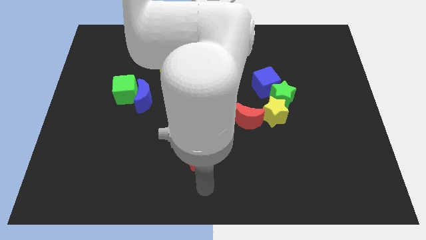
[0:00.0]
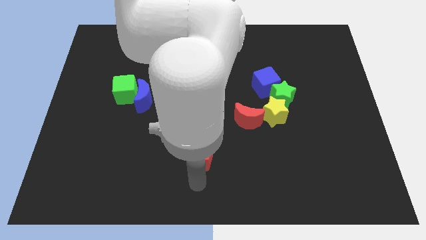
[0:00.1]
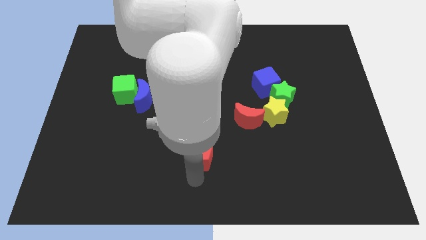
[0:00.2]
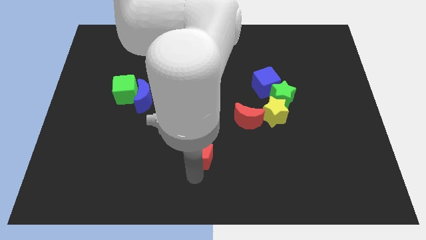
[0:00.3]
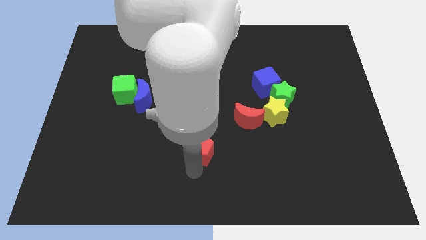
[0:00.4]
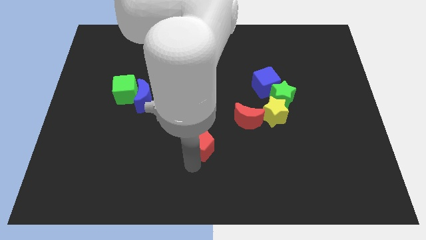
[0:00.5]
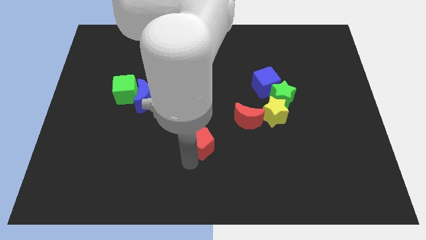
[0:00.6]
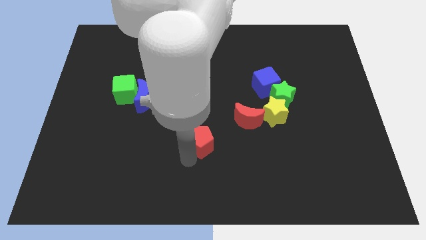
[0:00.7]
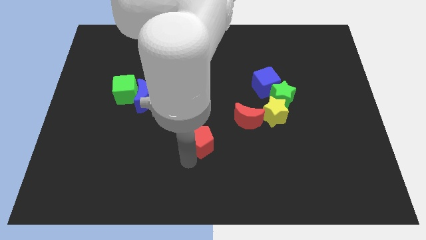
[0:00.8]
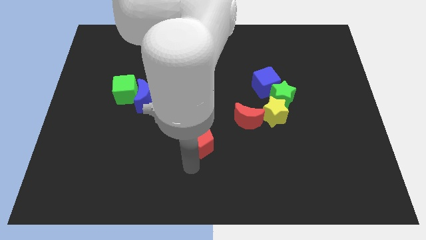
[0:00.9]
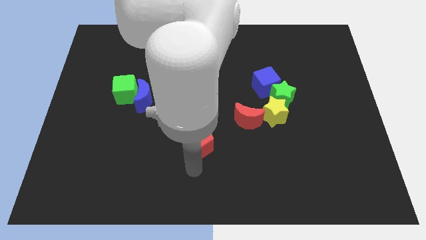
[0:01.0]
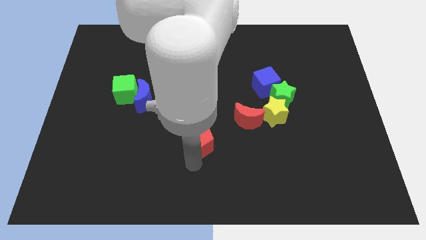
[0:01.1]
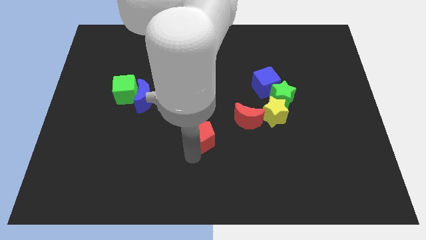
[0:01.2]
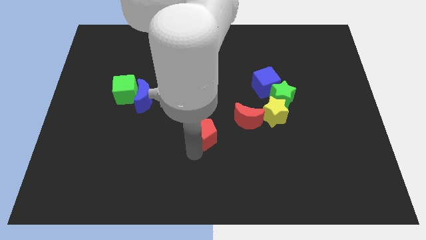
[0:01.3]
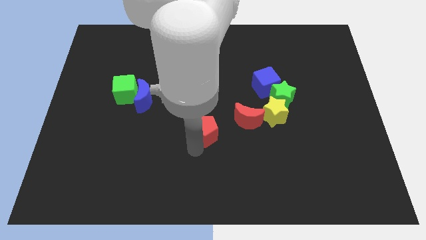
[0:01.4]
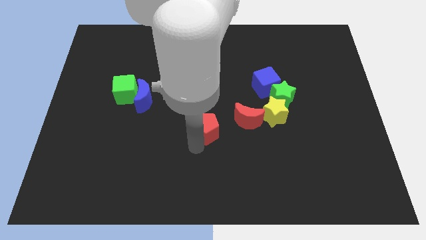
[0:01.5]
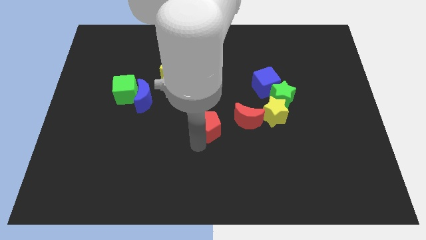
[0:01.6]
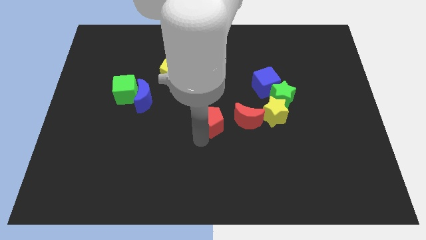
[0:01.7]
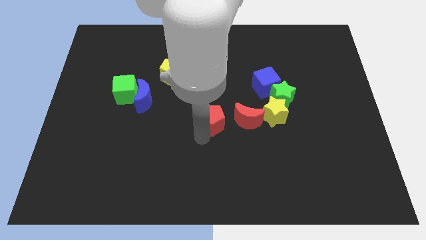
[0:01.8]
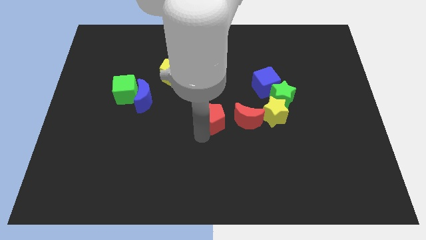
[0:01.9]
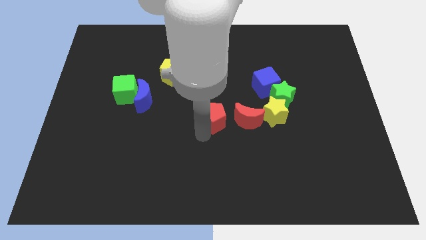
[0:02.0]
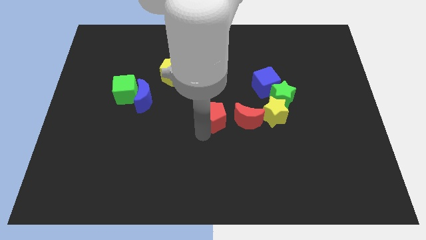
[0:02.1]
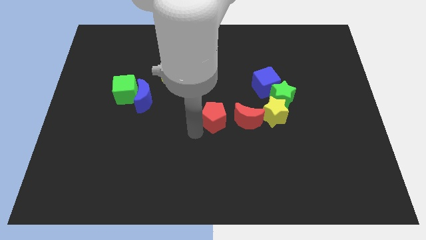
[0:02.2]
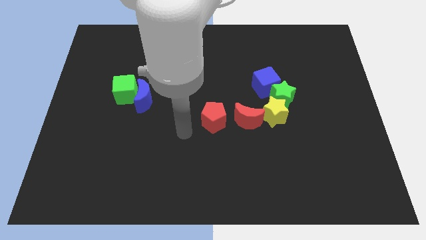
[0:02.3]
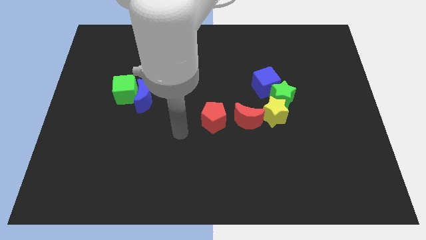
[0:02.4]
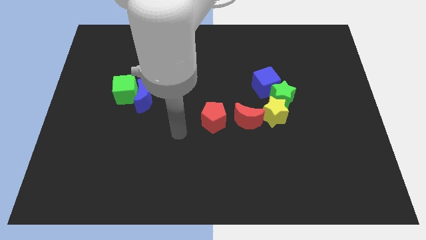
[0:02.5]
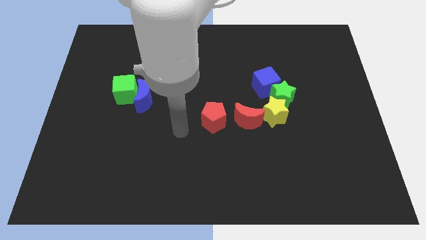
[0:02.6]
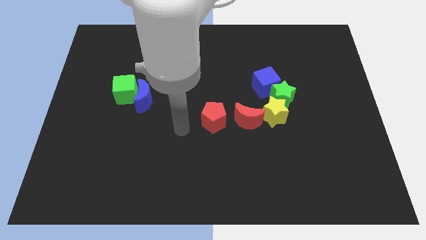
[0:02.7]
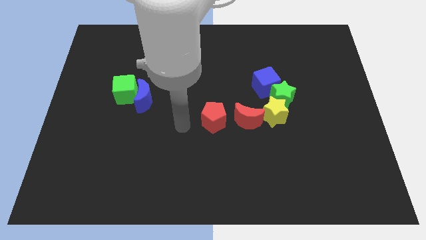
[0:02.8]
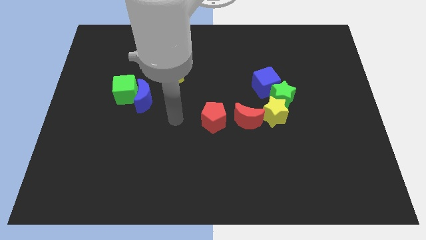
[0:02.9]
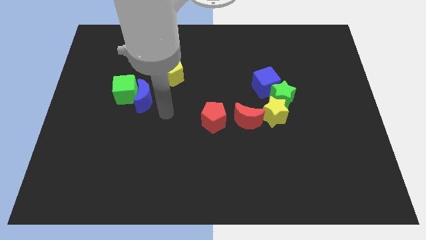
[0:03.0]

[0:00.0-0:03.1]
place the red pentagon next to the left side of the red moon

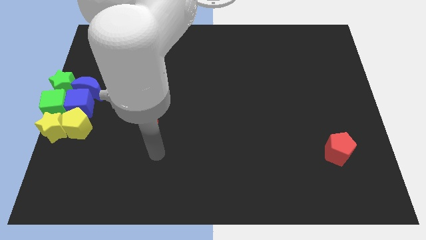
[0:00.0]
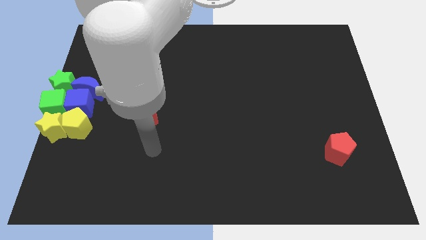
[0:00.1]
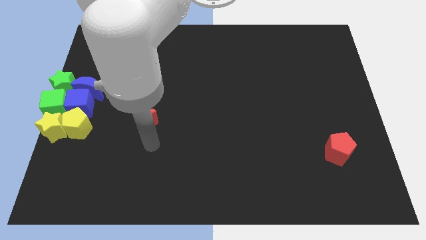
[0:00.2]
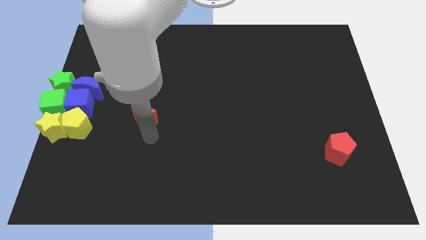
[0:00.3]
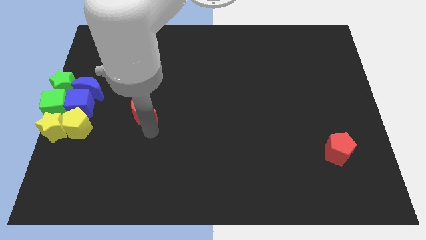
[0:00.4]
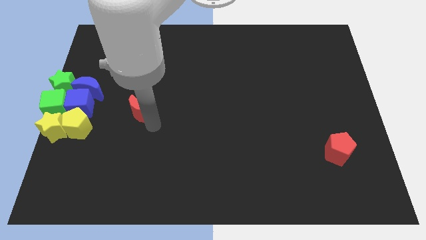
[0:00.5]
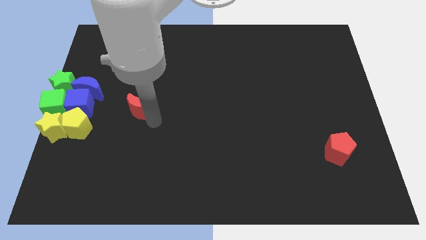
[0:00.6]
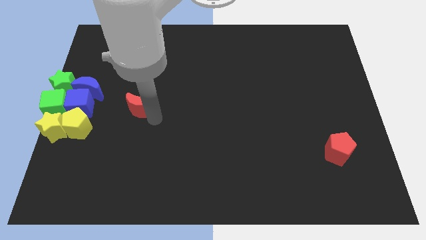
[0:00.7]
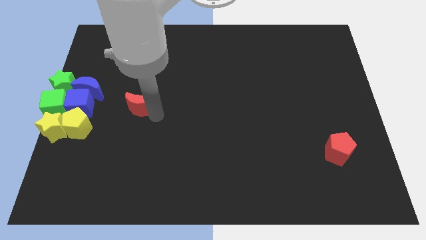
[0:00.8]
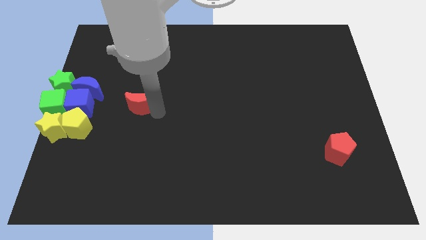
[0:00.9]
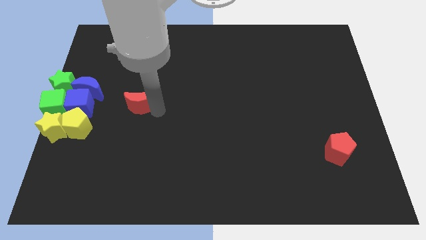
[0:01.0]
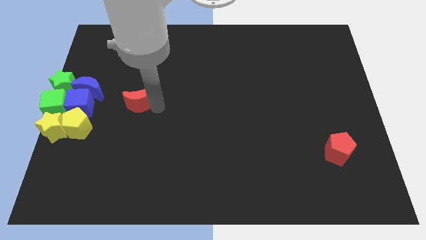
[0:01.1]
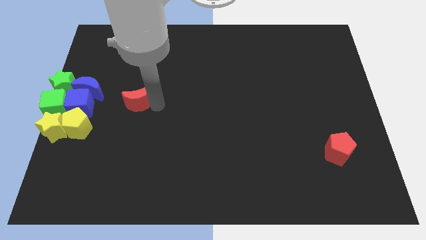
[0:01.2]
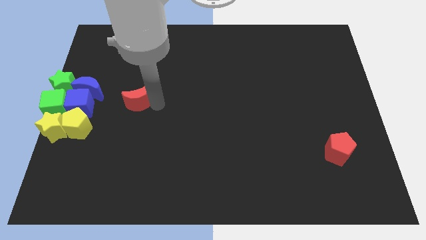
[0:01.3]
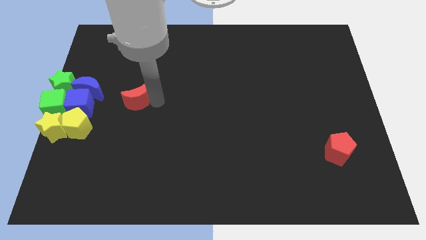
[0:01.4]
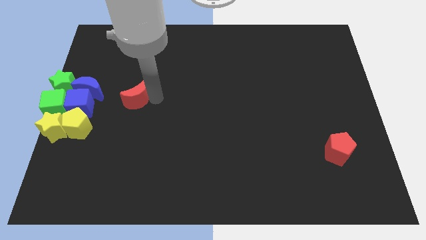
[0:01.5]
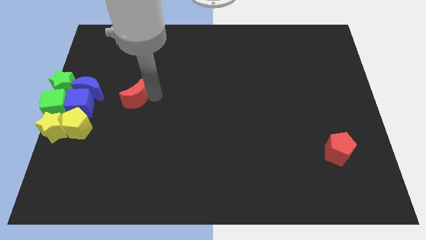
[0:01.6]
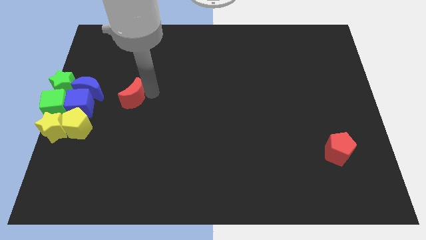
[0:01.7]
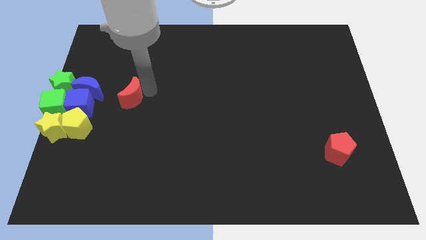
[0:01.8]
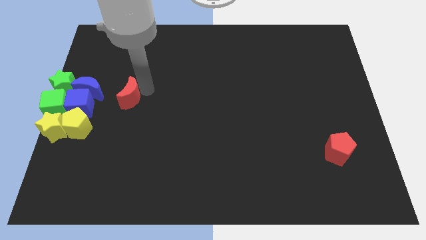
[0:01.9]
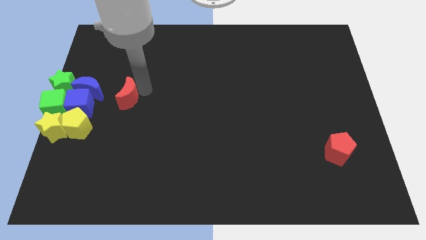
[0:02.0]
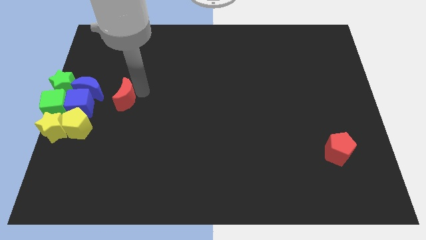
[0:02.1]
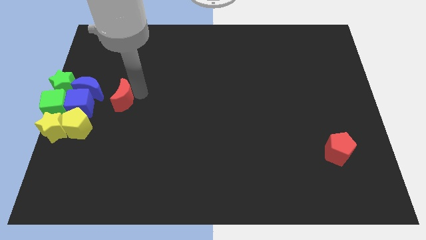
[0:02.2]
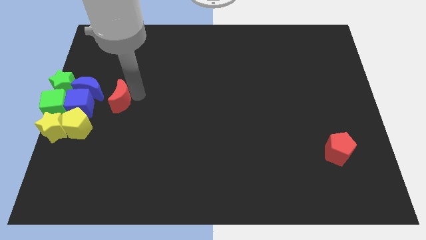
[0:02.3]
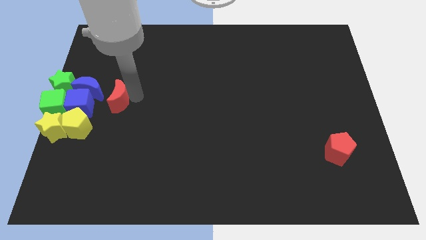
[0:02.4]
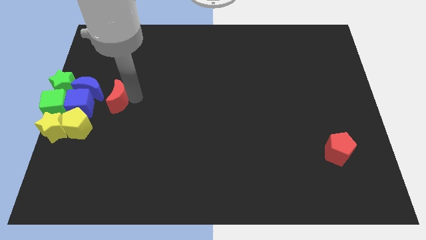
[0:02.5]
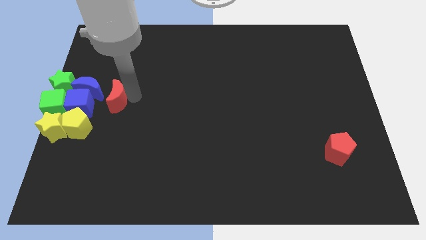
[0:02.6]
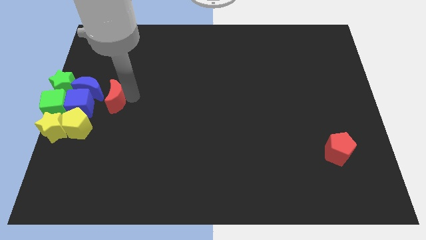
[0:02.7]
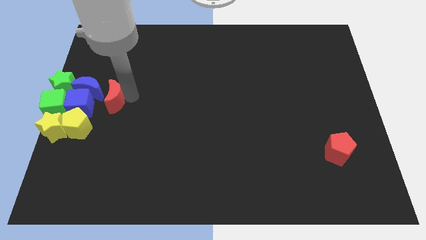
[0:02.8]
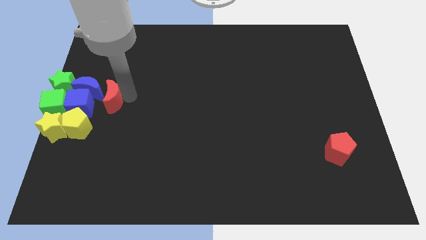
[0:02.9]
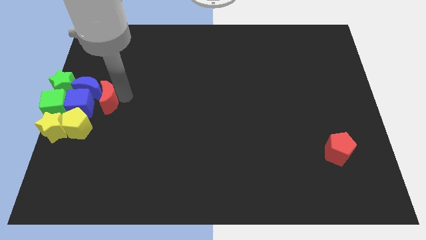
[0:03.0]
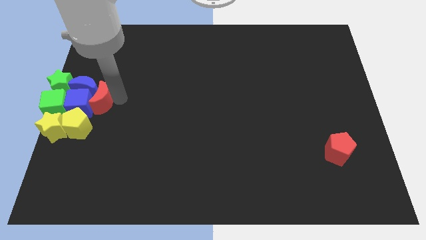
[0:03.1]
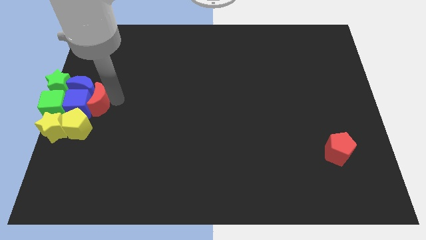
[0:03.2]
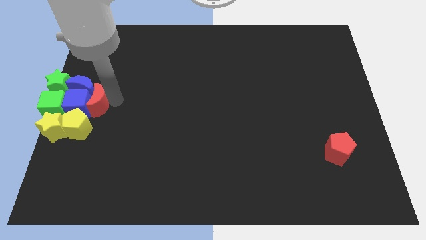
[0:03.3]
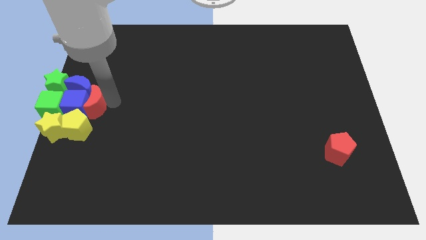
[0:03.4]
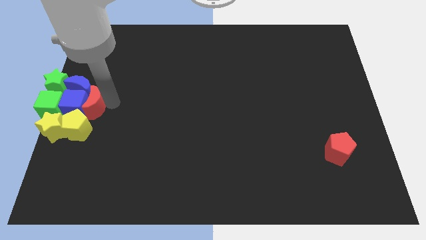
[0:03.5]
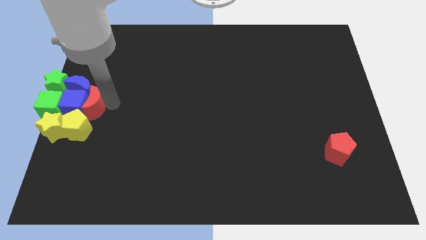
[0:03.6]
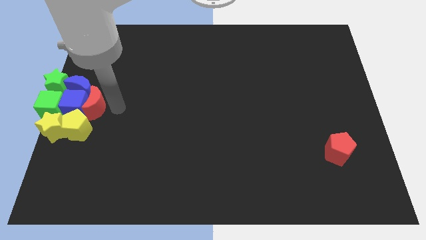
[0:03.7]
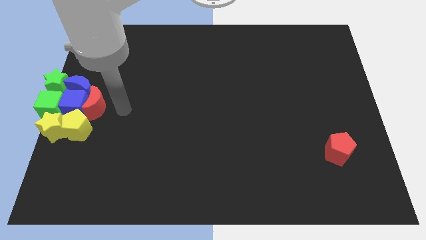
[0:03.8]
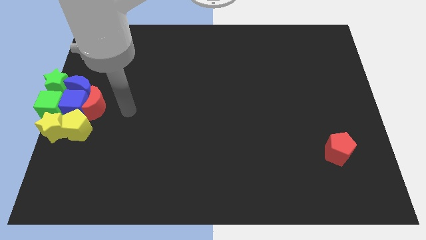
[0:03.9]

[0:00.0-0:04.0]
move the red moon into blue cube

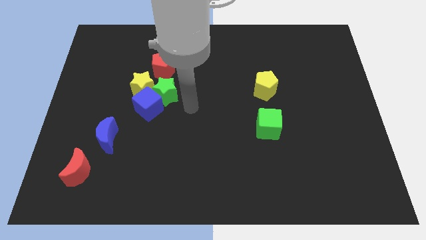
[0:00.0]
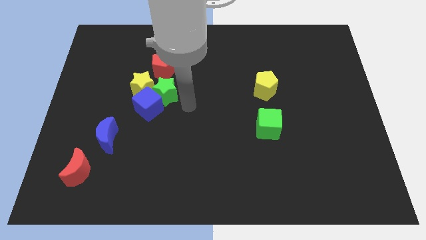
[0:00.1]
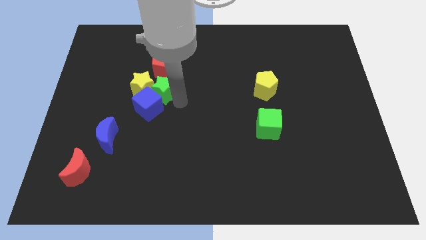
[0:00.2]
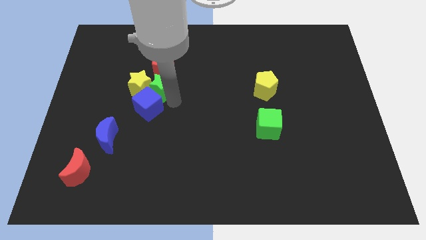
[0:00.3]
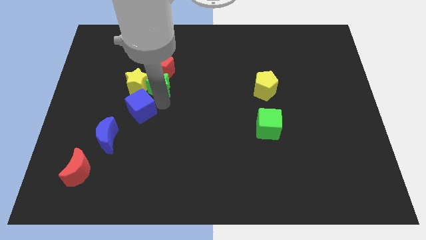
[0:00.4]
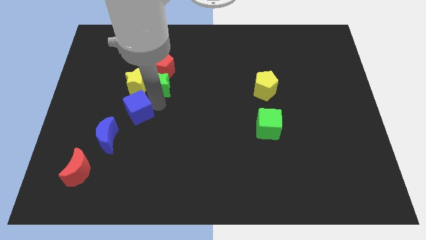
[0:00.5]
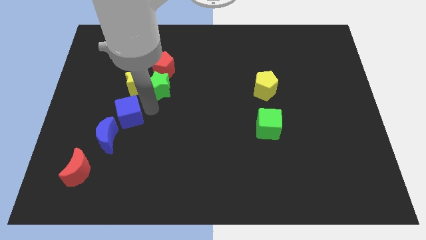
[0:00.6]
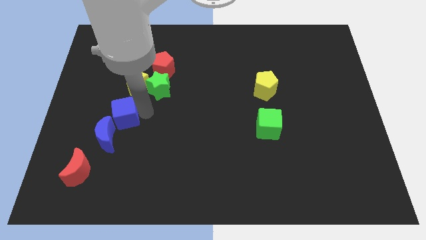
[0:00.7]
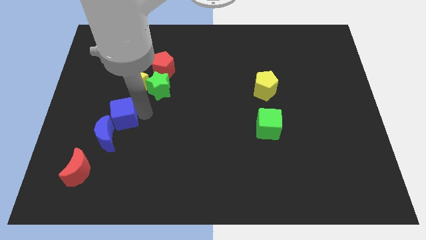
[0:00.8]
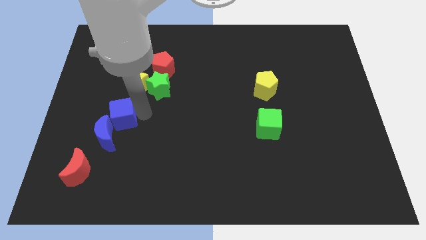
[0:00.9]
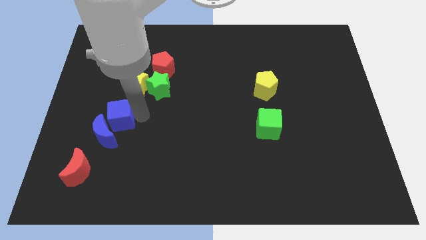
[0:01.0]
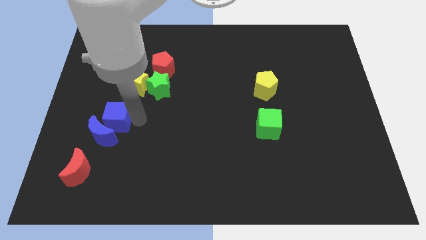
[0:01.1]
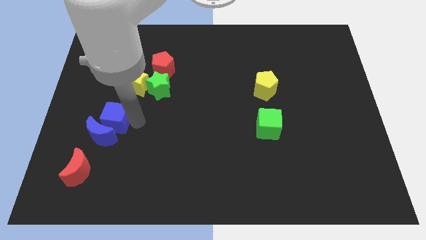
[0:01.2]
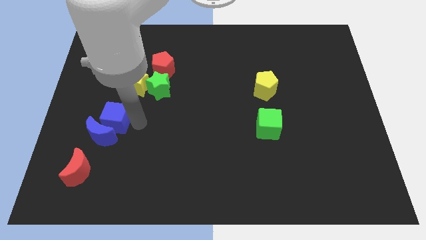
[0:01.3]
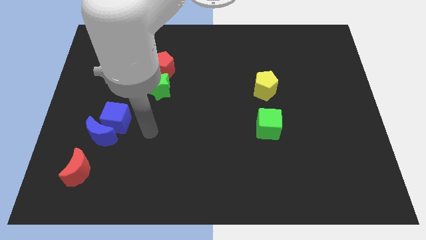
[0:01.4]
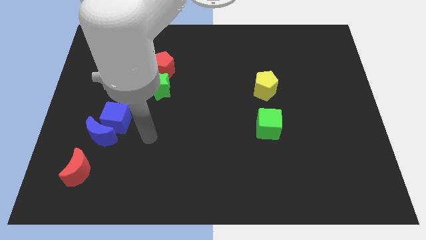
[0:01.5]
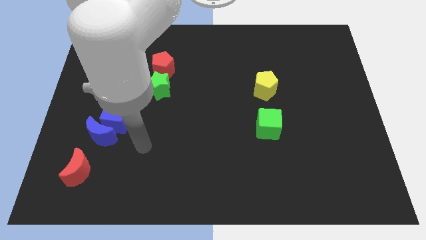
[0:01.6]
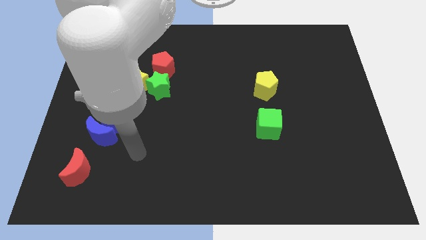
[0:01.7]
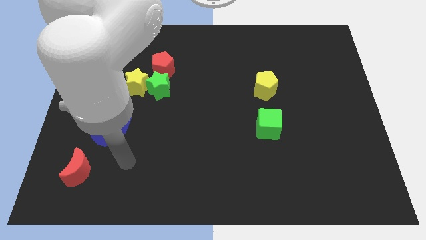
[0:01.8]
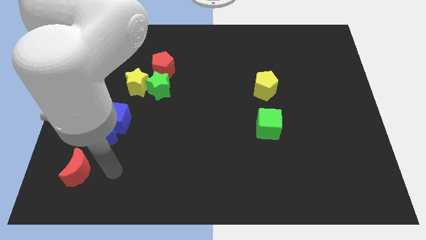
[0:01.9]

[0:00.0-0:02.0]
push the blue cube into blue moon on top
